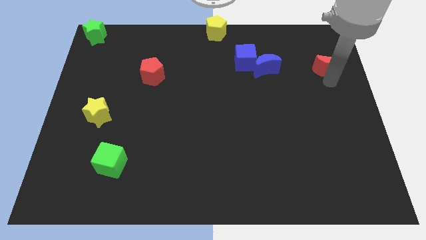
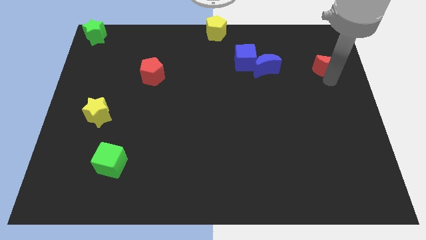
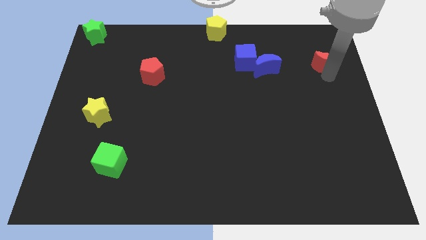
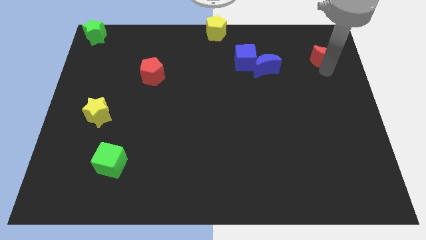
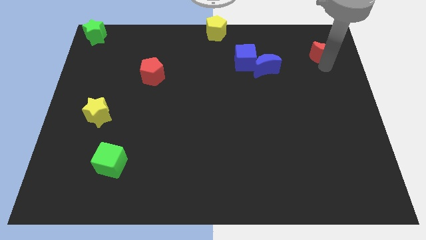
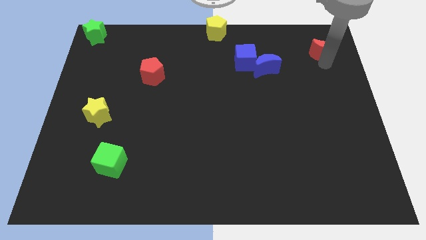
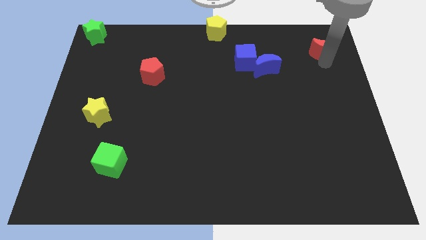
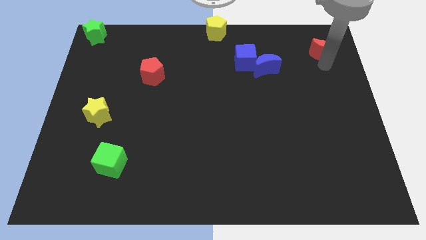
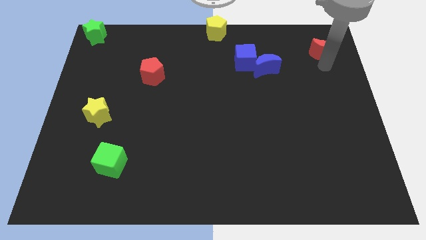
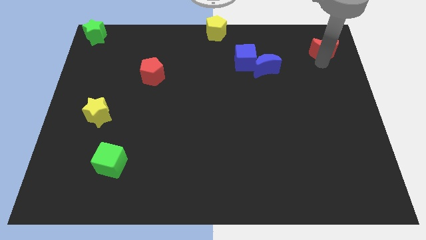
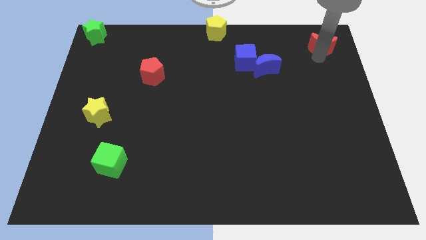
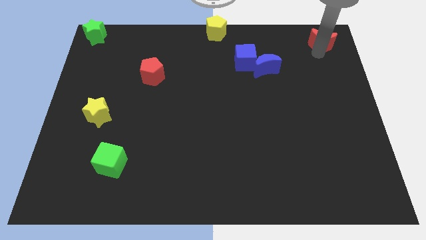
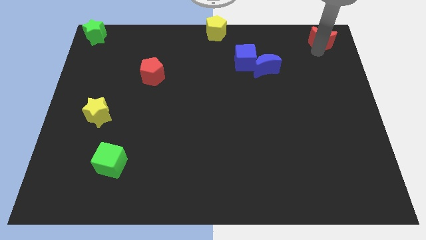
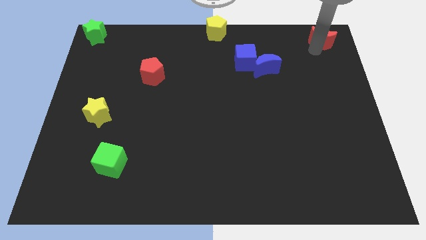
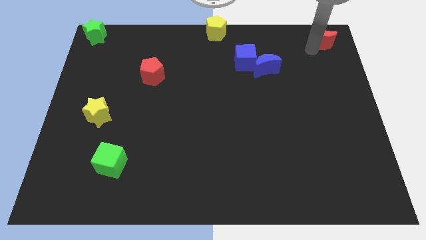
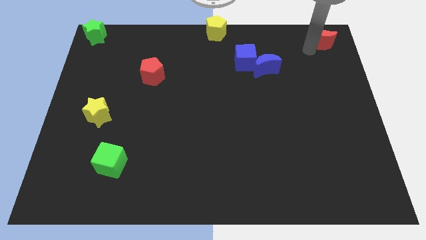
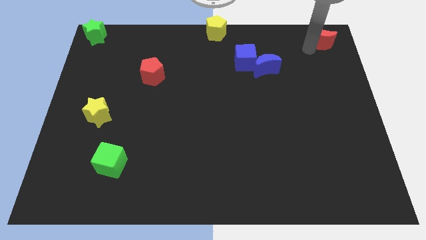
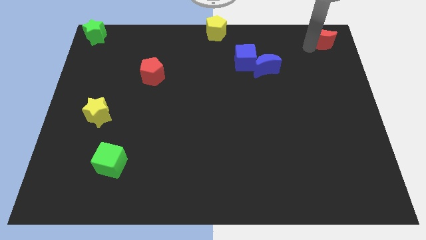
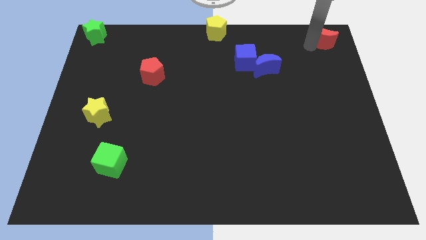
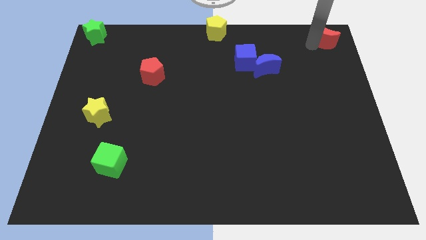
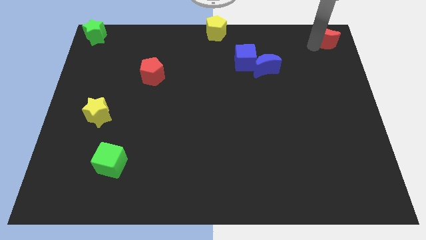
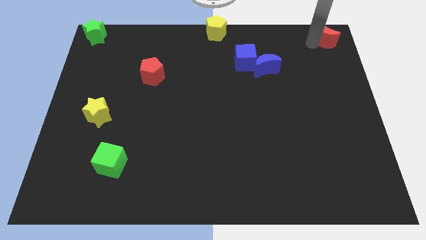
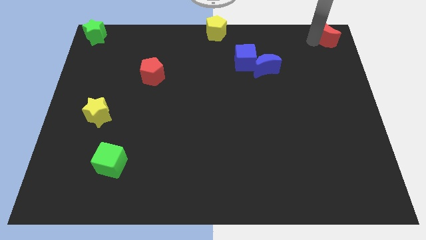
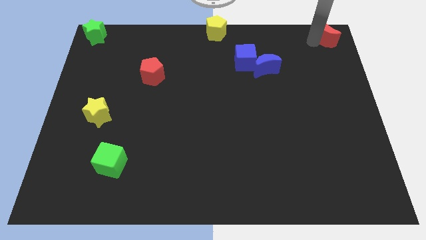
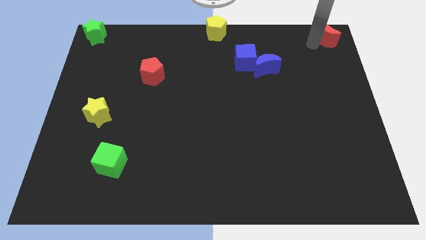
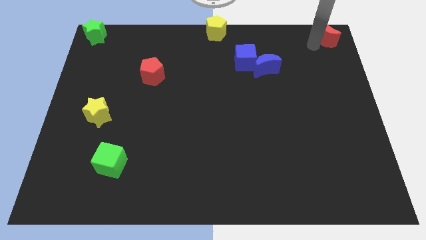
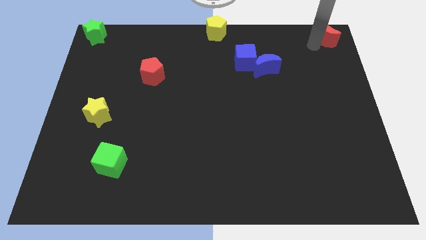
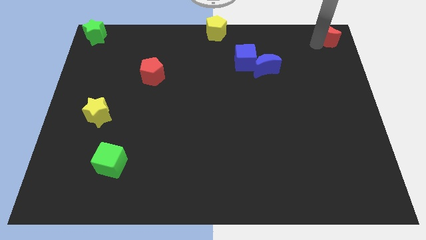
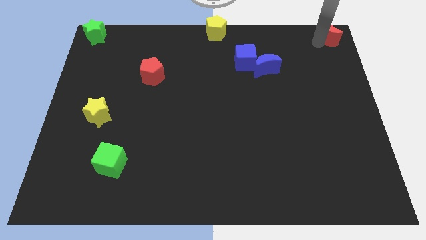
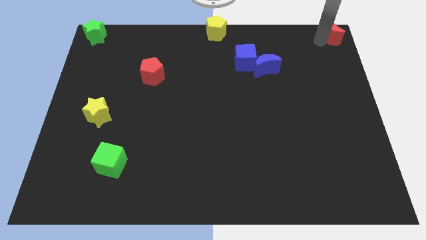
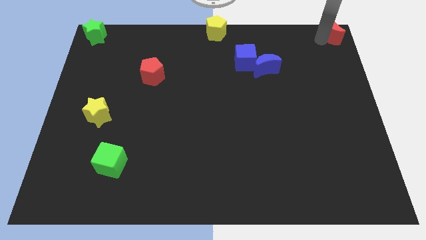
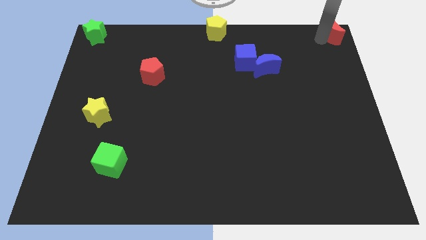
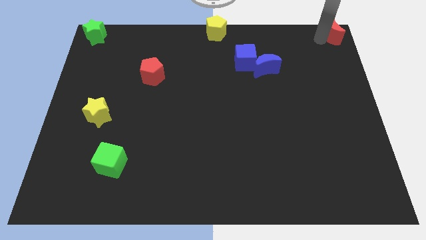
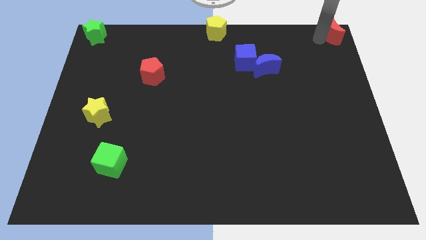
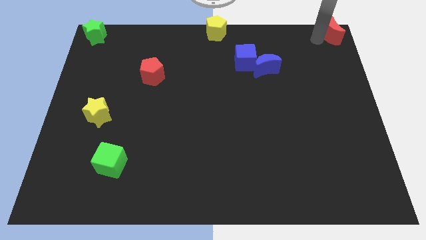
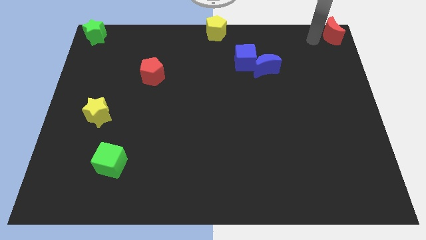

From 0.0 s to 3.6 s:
move the red moon to the top right corner of the board

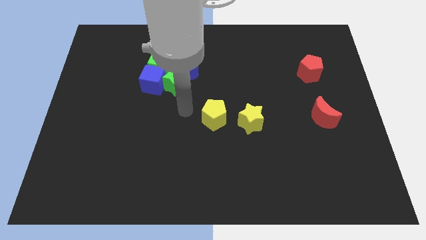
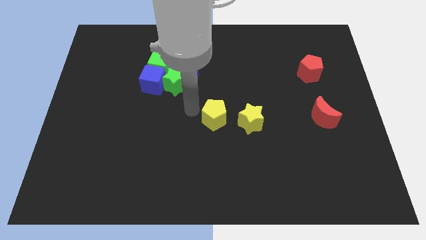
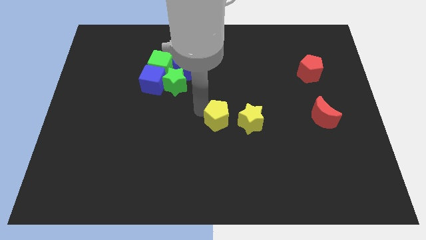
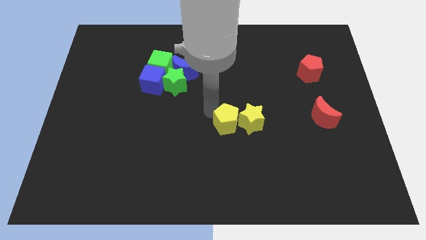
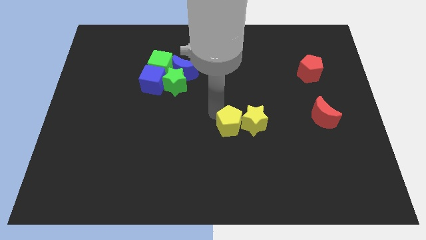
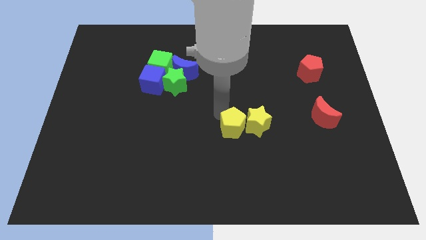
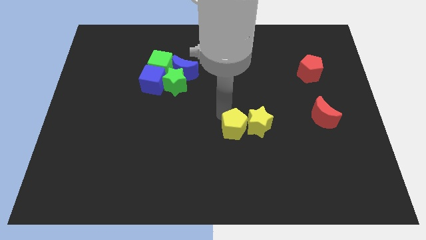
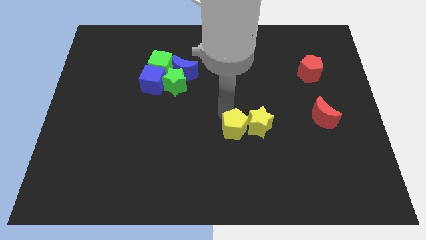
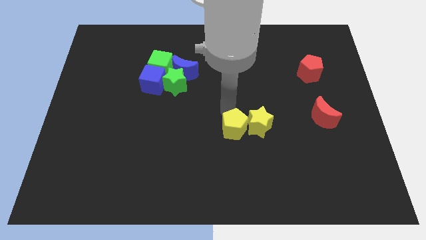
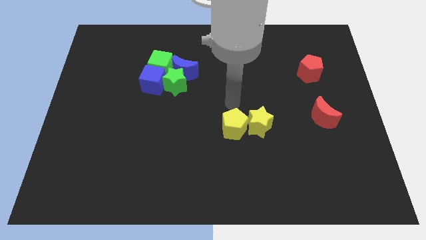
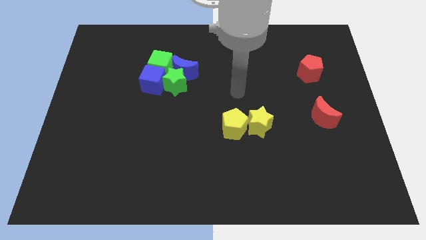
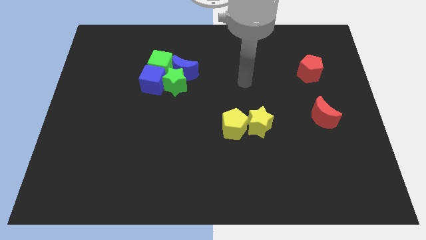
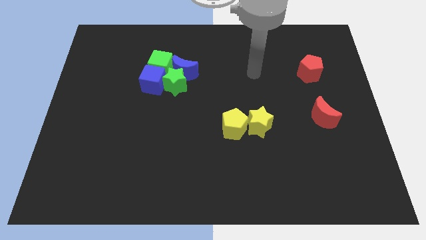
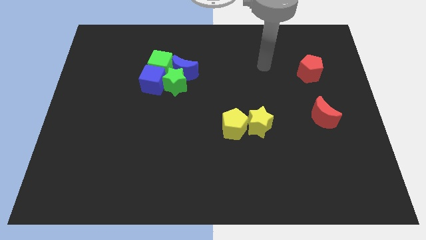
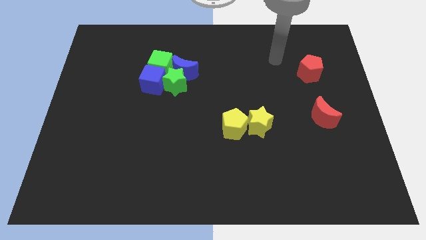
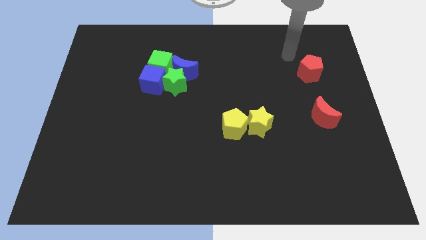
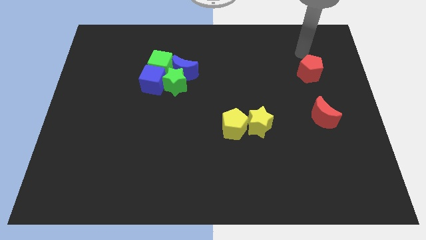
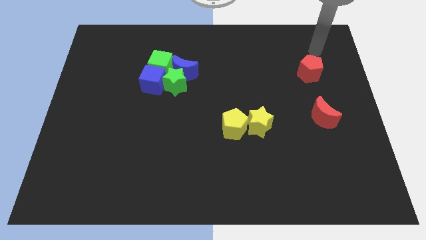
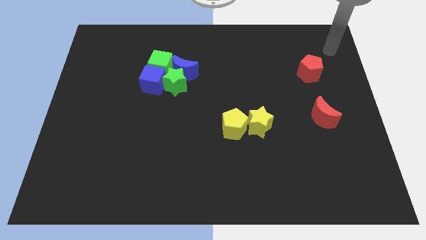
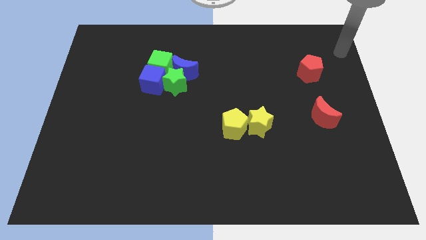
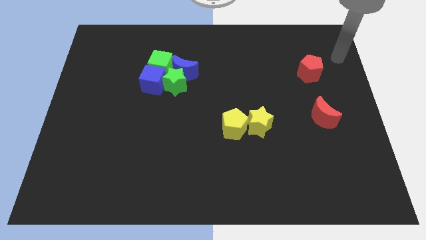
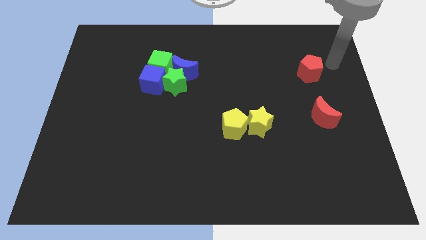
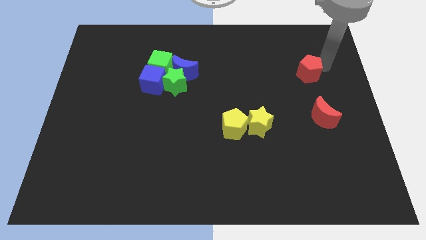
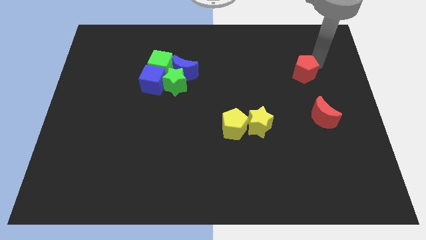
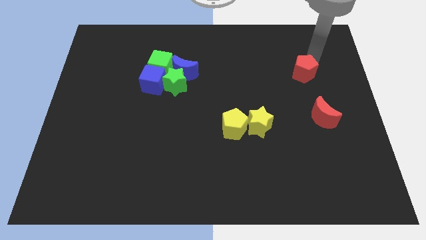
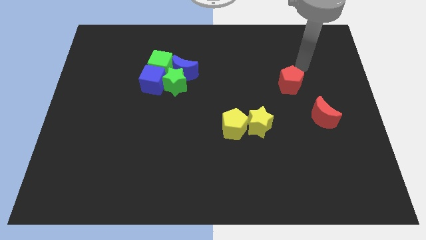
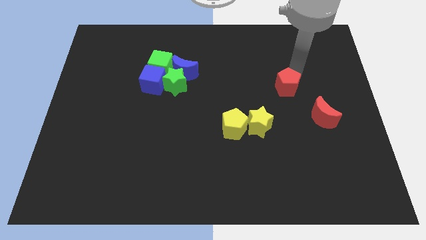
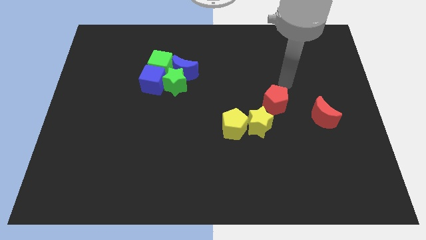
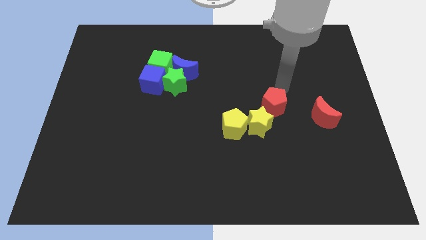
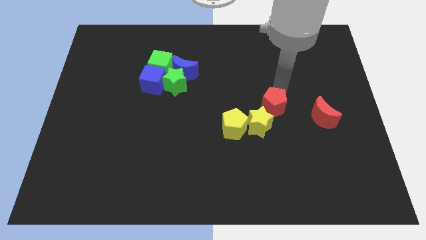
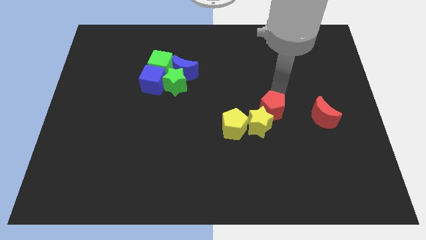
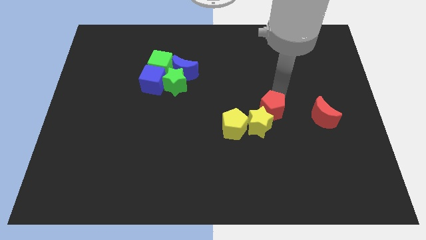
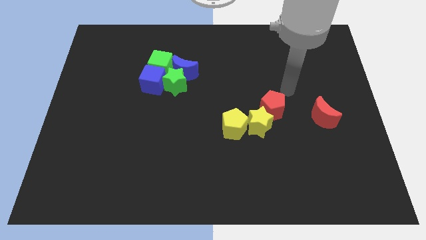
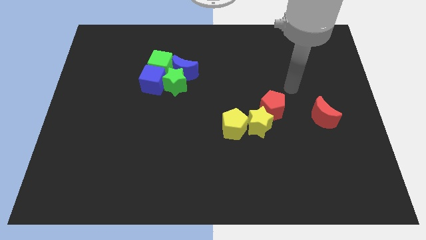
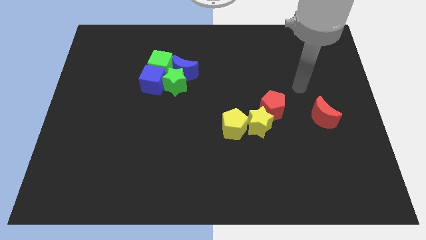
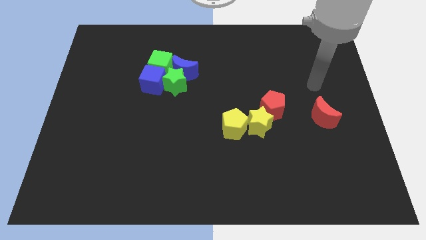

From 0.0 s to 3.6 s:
put the red pentagon on the top of the yellow star

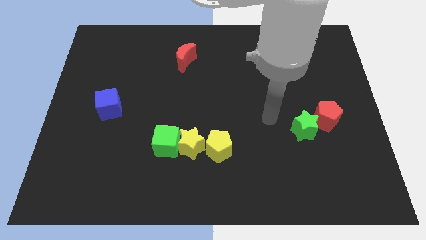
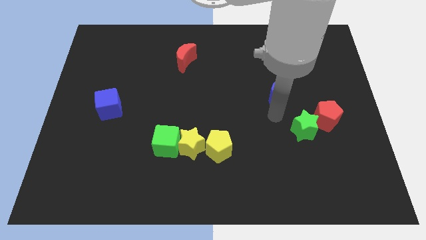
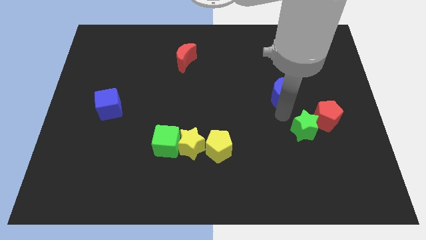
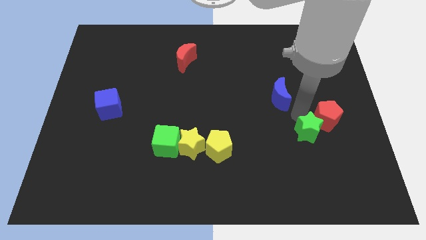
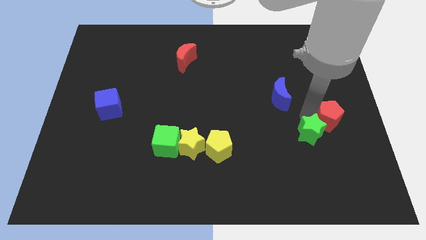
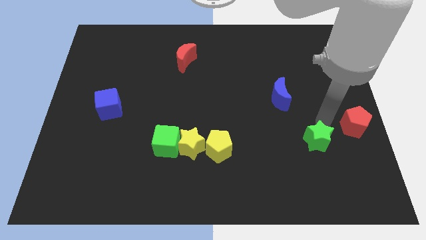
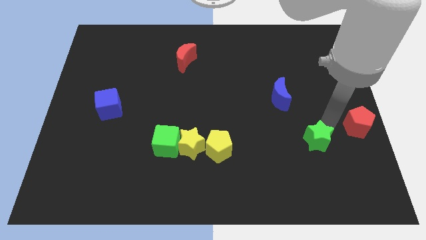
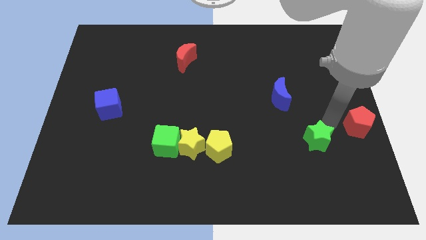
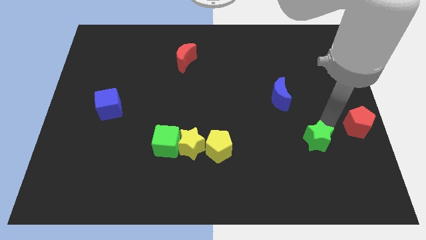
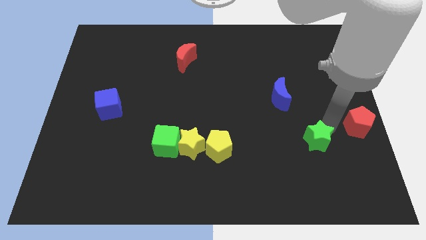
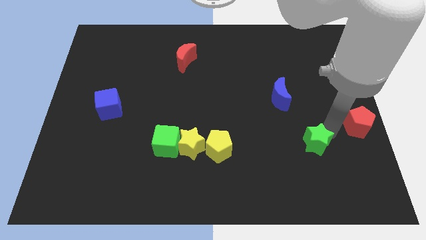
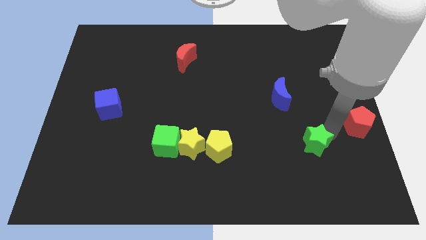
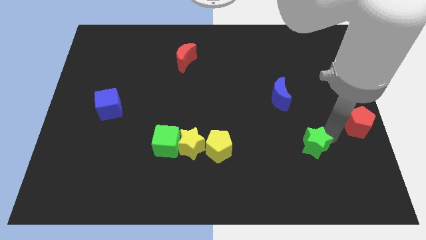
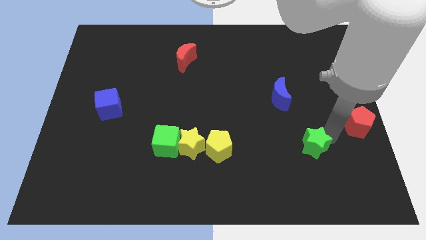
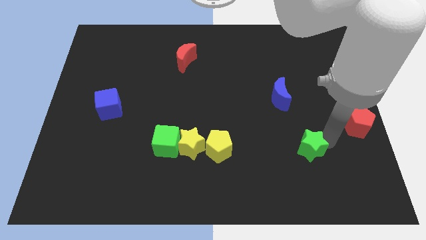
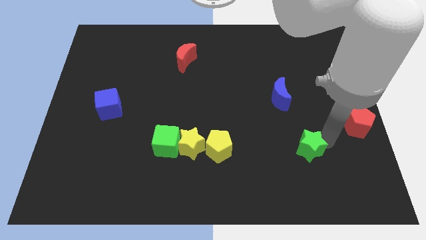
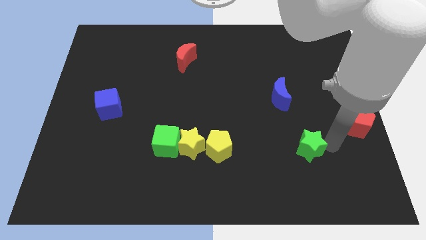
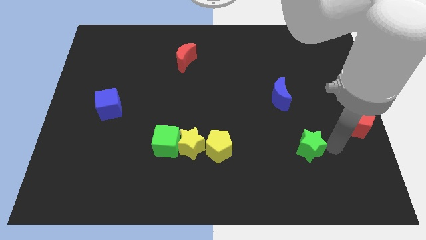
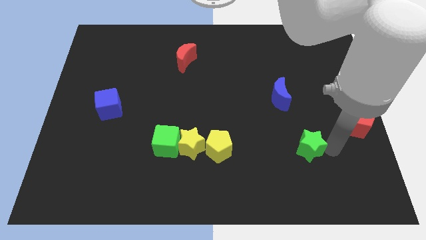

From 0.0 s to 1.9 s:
place the green star right to the yellow pentagon
